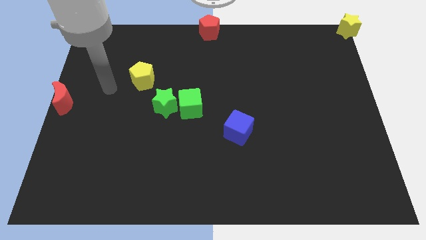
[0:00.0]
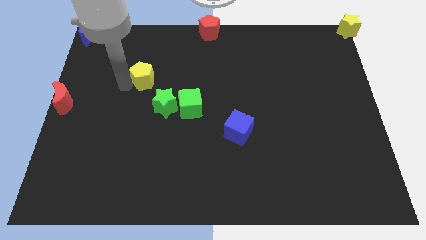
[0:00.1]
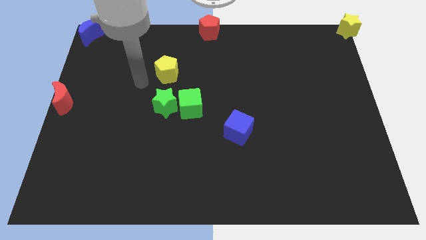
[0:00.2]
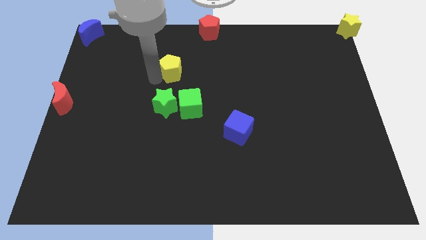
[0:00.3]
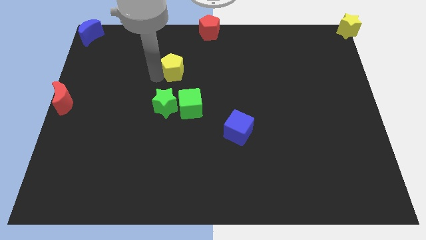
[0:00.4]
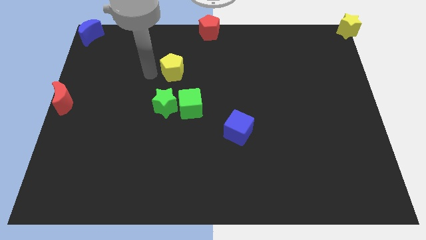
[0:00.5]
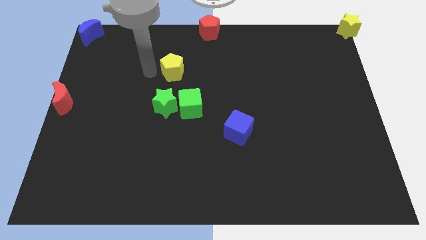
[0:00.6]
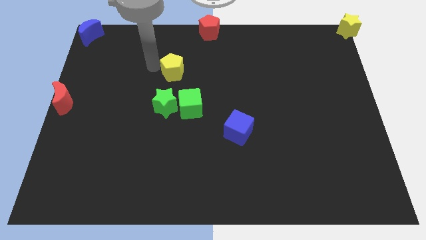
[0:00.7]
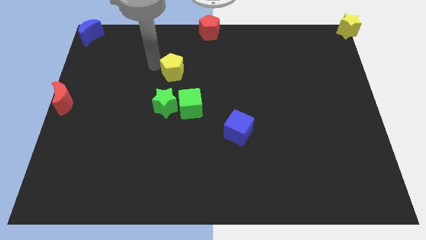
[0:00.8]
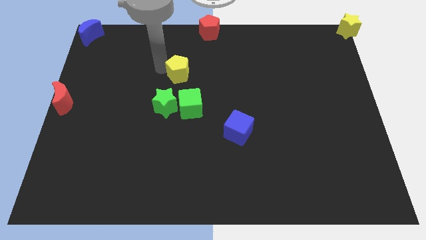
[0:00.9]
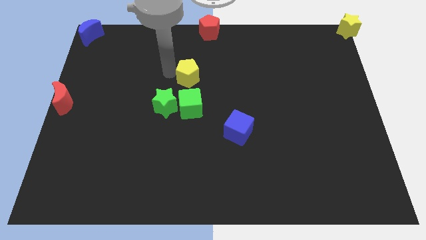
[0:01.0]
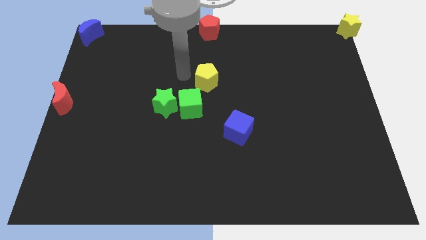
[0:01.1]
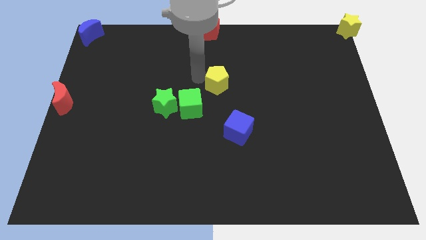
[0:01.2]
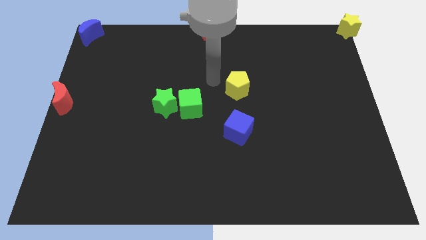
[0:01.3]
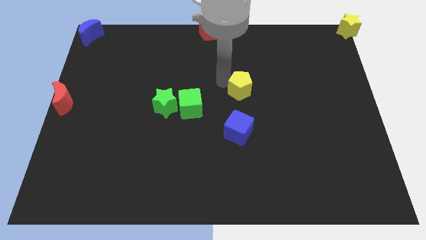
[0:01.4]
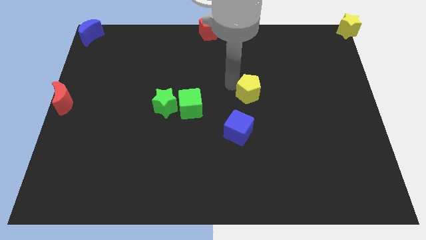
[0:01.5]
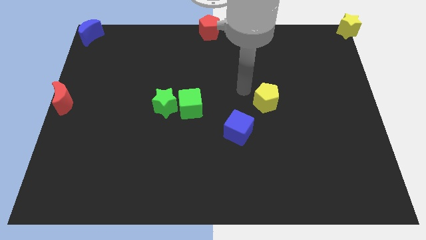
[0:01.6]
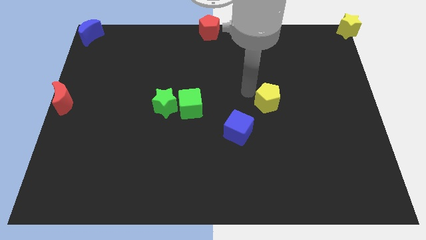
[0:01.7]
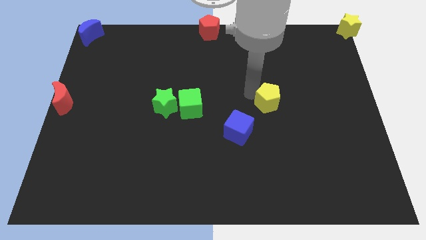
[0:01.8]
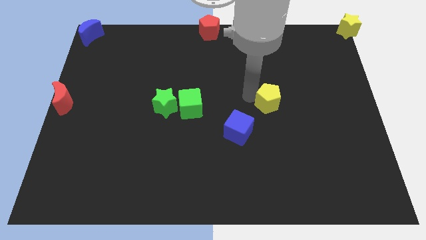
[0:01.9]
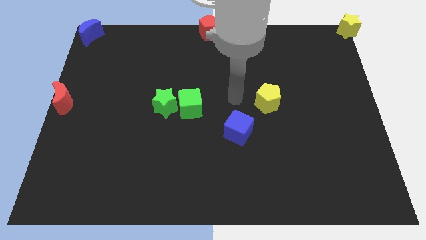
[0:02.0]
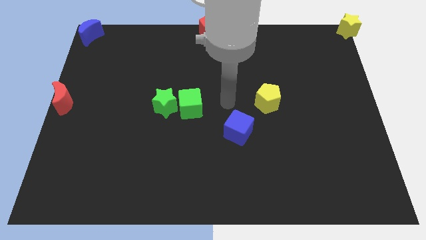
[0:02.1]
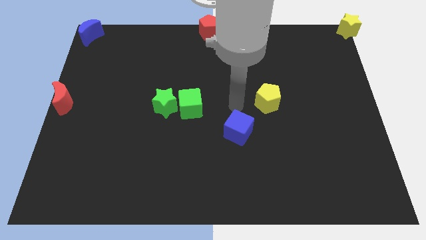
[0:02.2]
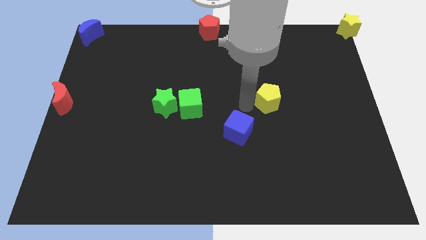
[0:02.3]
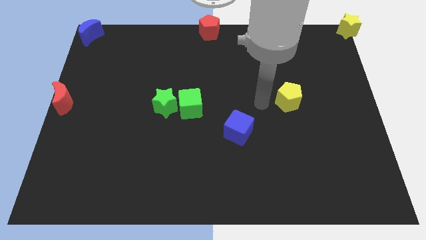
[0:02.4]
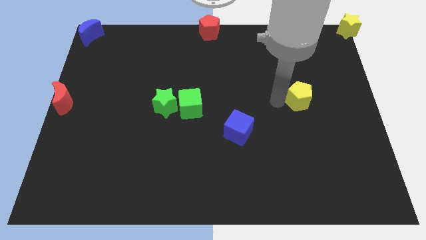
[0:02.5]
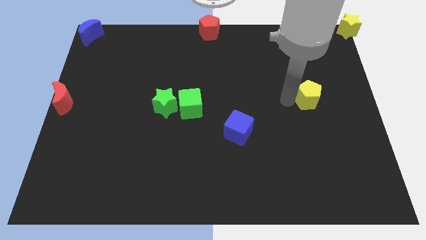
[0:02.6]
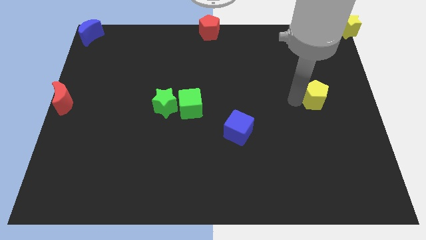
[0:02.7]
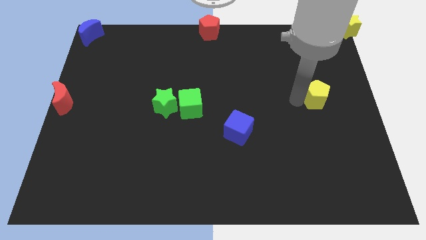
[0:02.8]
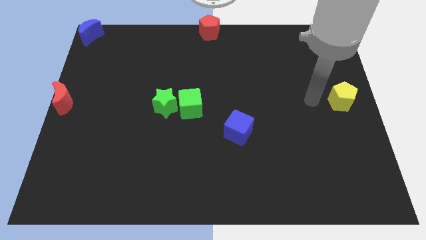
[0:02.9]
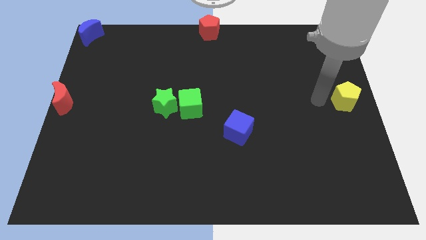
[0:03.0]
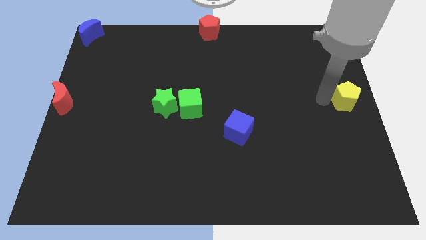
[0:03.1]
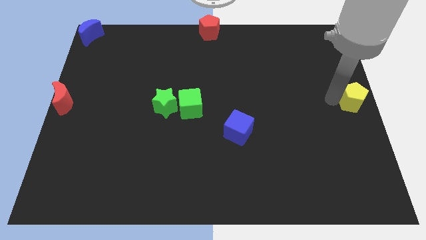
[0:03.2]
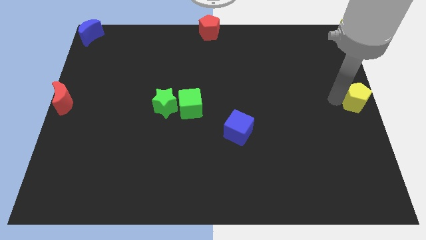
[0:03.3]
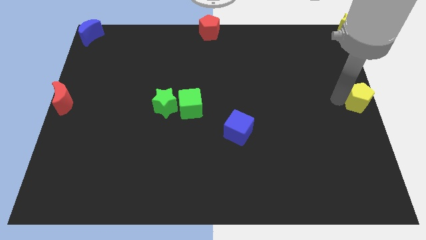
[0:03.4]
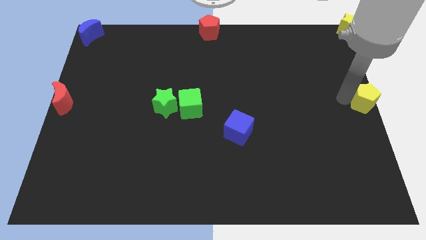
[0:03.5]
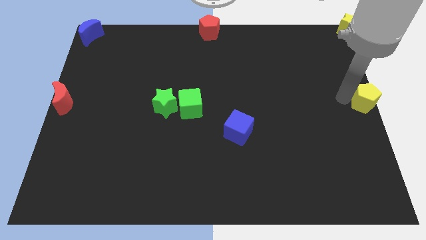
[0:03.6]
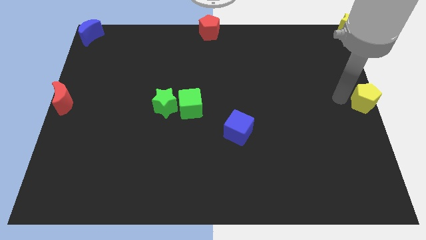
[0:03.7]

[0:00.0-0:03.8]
move the yellow pentagon to the right center

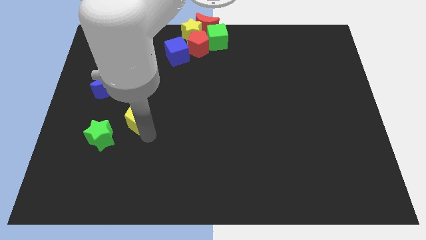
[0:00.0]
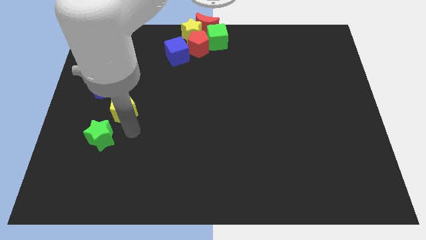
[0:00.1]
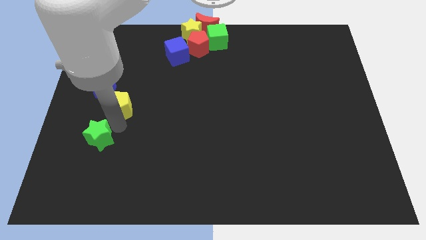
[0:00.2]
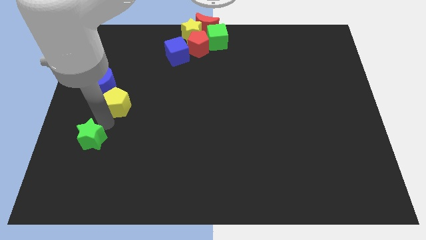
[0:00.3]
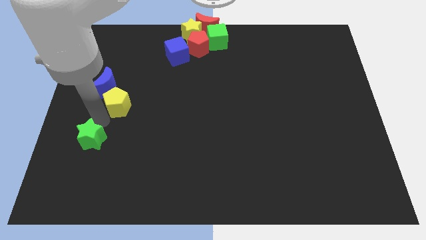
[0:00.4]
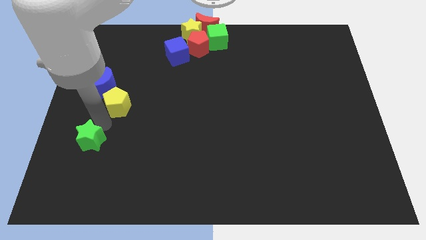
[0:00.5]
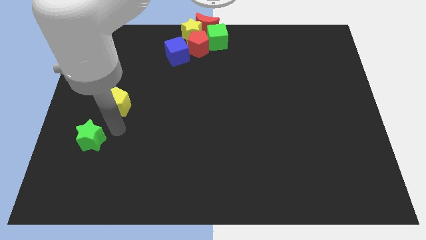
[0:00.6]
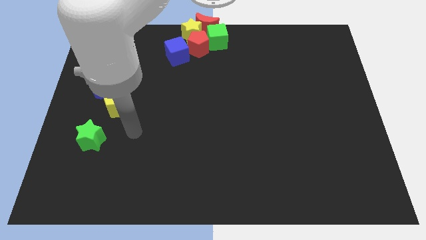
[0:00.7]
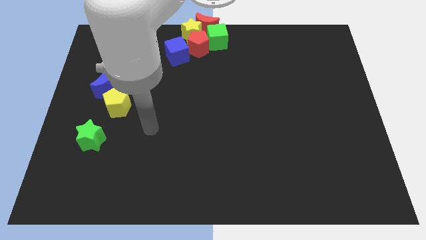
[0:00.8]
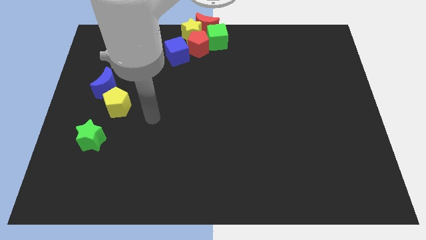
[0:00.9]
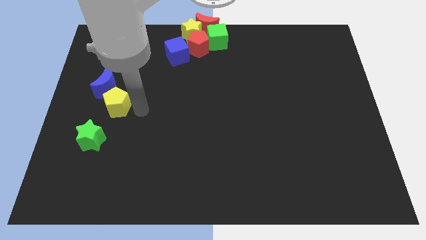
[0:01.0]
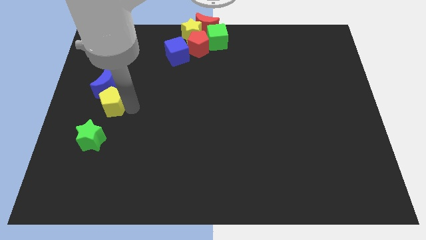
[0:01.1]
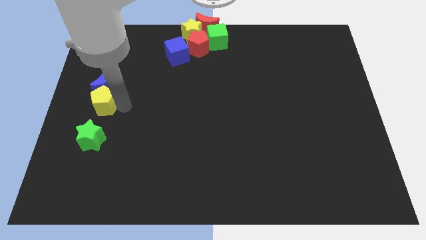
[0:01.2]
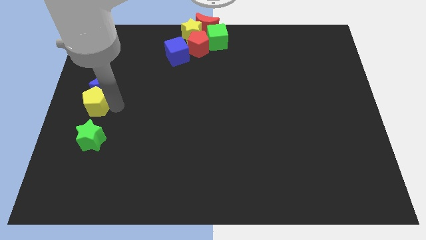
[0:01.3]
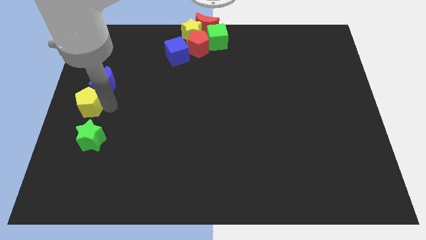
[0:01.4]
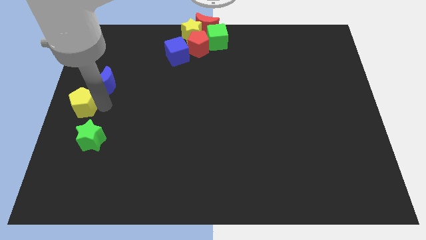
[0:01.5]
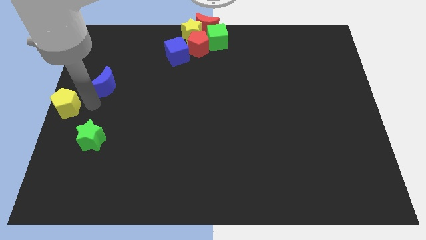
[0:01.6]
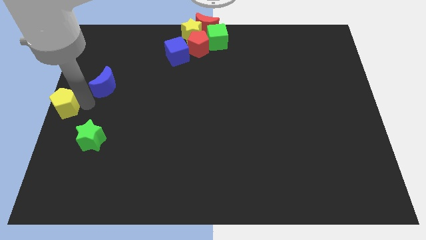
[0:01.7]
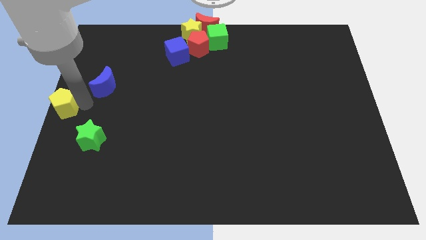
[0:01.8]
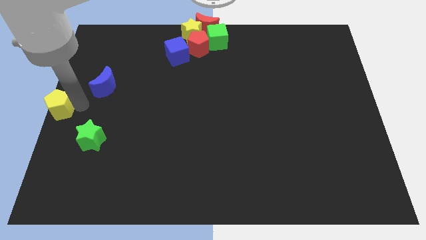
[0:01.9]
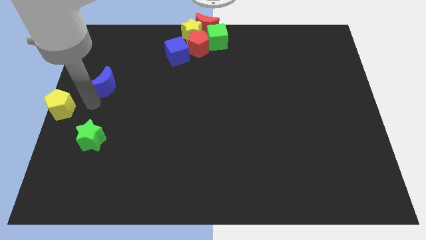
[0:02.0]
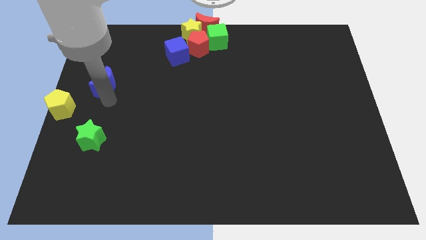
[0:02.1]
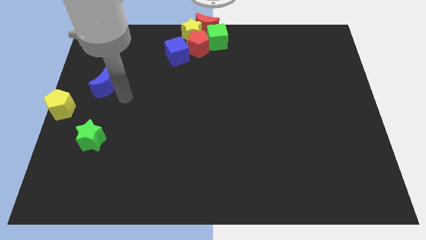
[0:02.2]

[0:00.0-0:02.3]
move yellow pentagon to the left center of the board

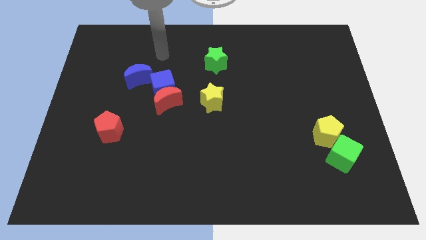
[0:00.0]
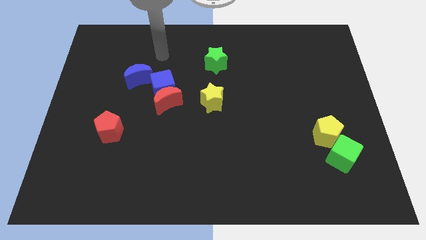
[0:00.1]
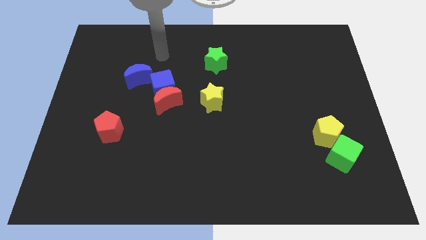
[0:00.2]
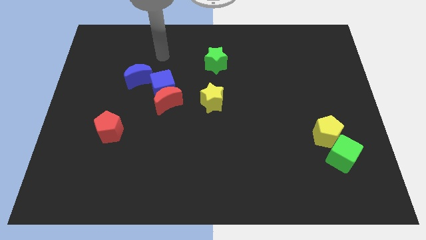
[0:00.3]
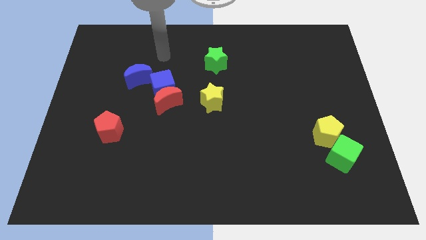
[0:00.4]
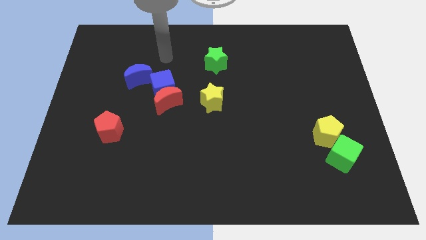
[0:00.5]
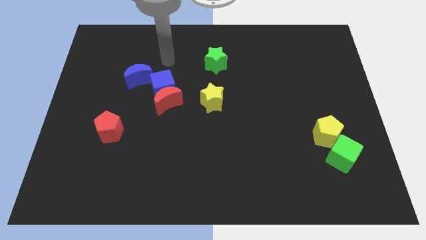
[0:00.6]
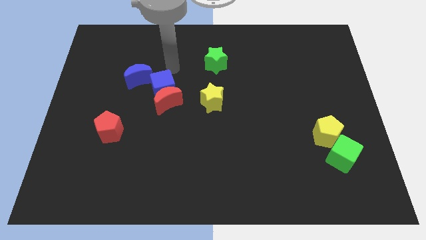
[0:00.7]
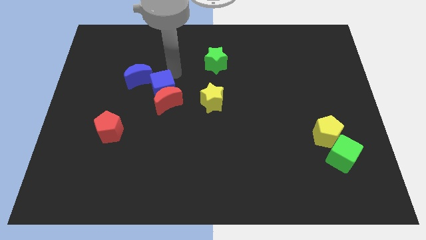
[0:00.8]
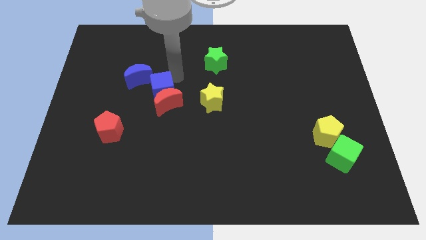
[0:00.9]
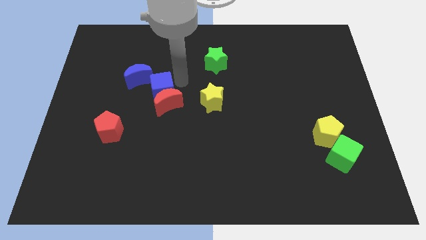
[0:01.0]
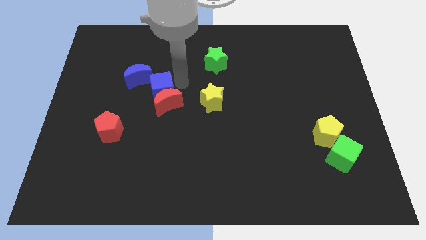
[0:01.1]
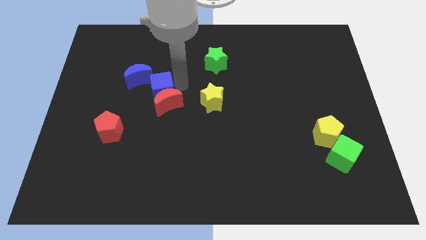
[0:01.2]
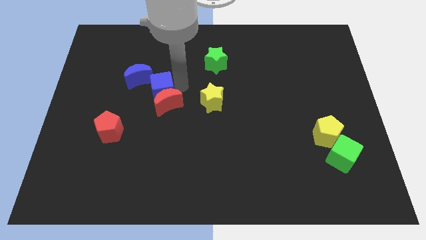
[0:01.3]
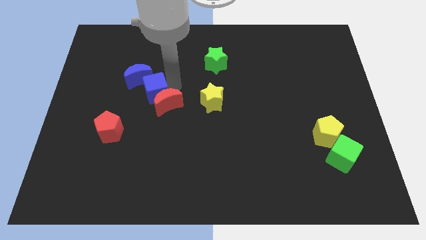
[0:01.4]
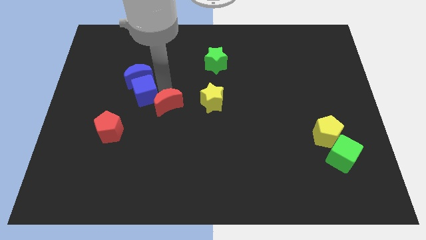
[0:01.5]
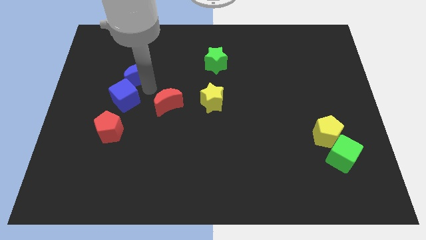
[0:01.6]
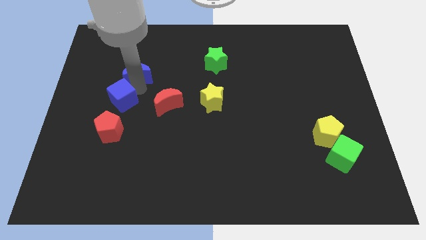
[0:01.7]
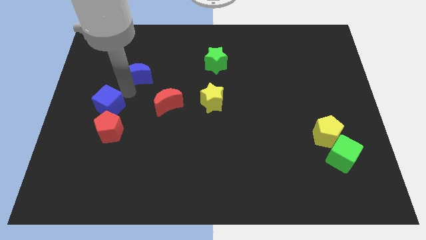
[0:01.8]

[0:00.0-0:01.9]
push the blue cube above red pentagon

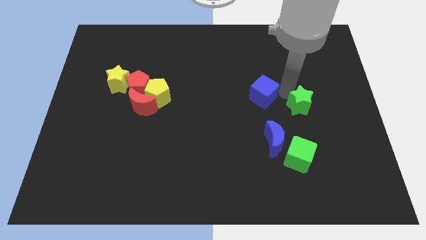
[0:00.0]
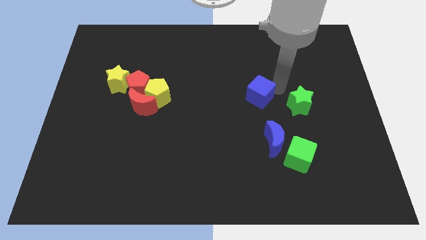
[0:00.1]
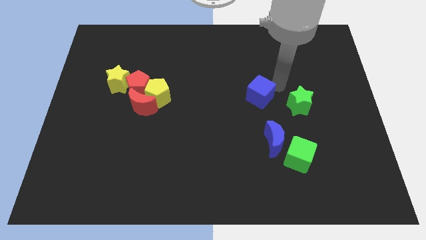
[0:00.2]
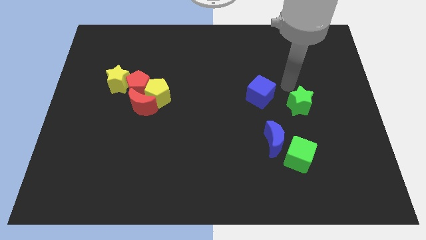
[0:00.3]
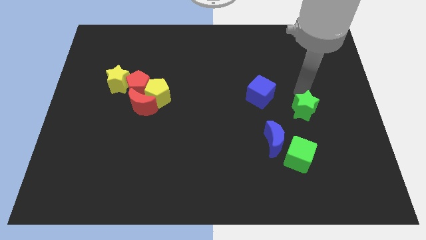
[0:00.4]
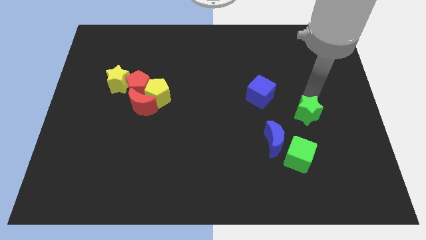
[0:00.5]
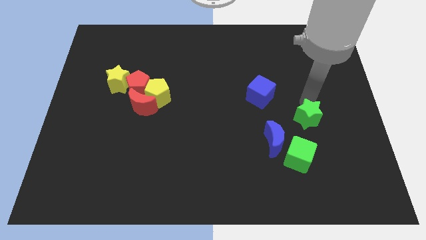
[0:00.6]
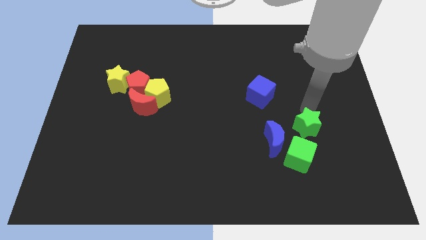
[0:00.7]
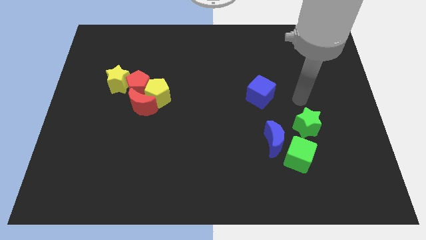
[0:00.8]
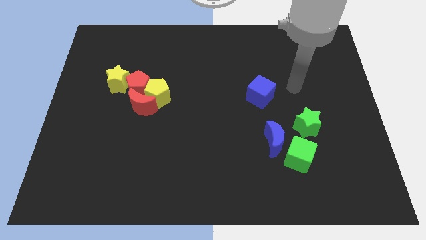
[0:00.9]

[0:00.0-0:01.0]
push the green star into the green cube
